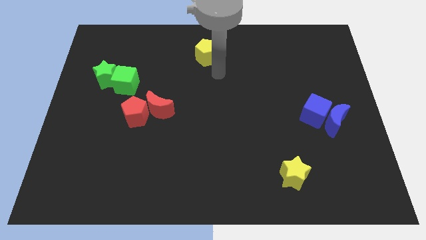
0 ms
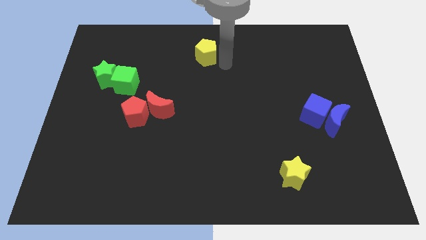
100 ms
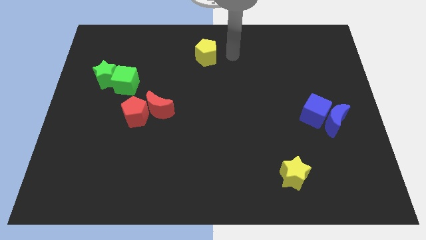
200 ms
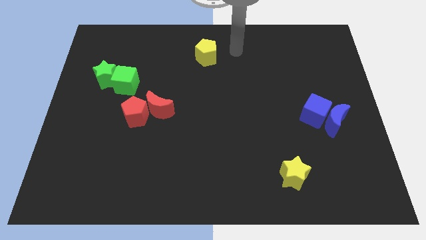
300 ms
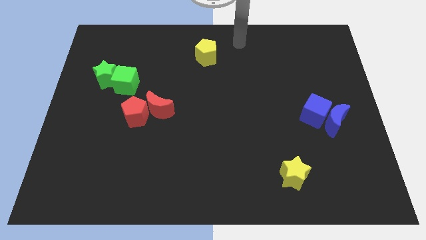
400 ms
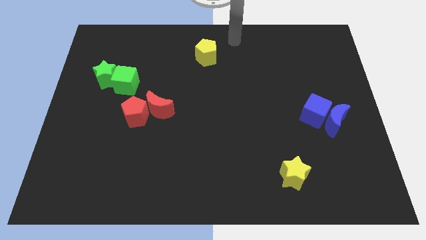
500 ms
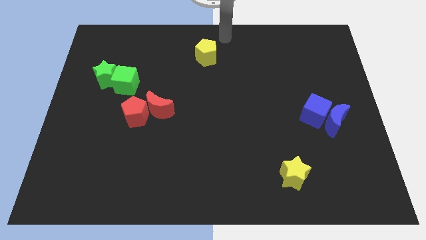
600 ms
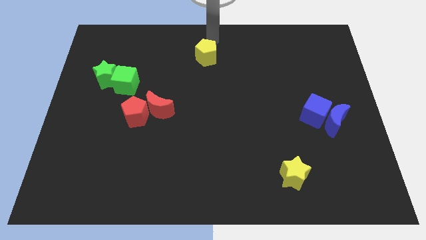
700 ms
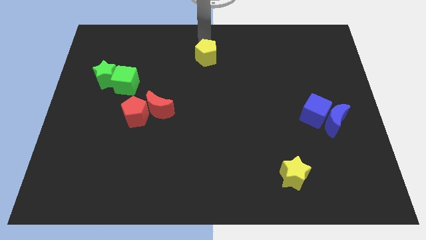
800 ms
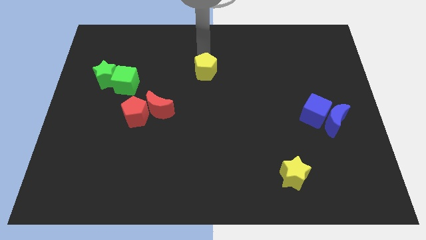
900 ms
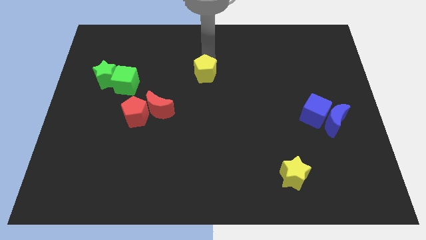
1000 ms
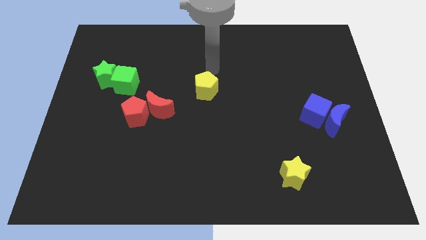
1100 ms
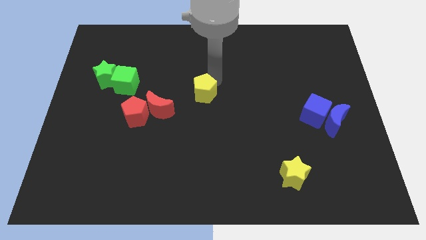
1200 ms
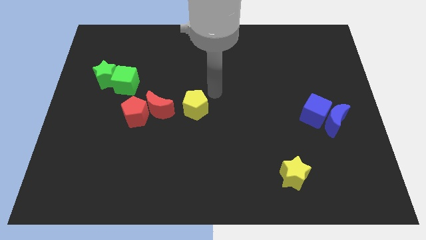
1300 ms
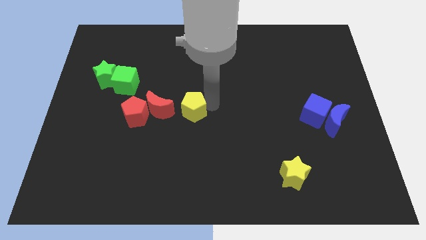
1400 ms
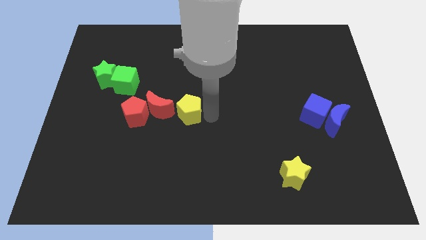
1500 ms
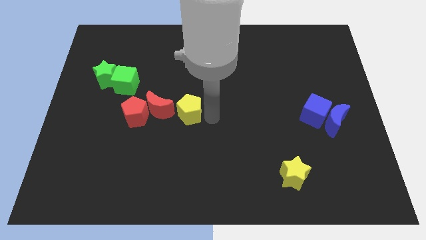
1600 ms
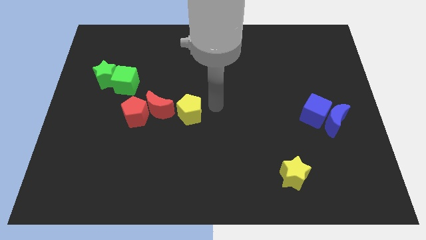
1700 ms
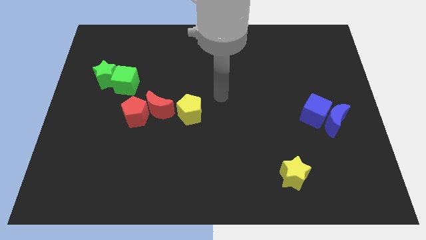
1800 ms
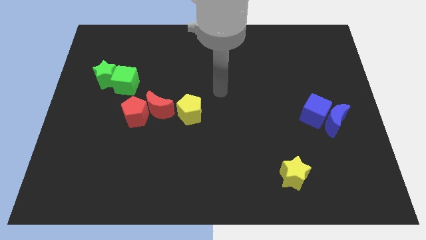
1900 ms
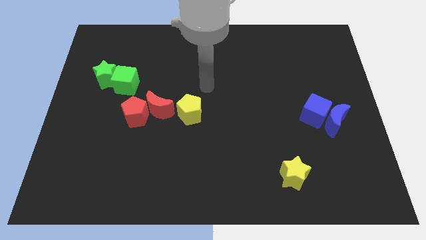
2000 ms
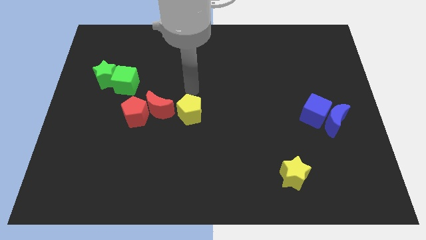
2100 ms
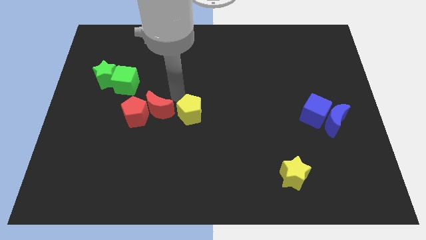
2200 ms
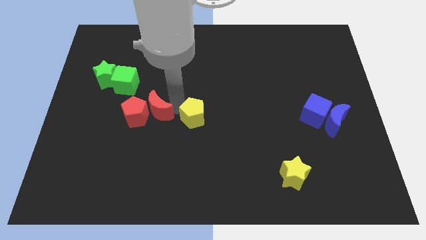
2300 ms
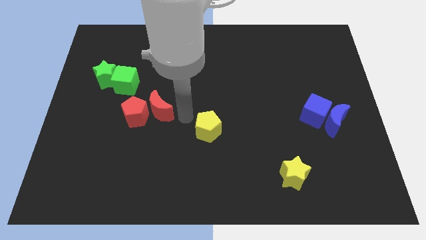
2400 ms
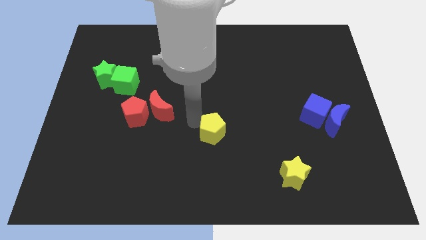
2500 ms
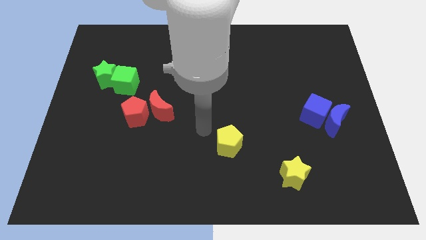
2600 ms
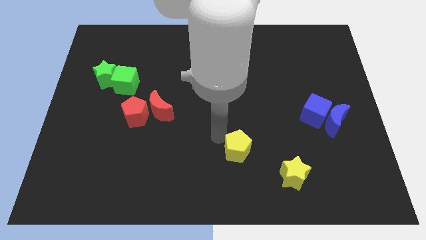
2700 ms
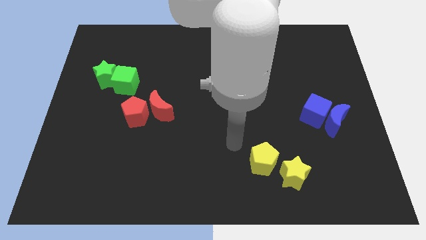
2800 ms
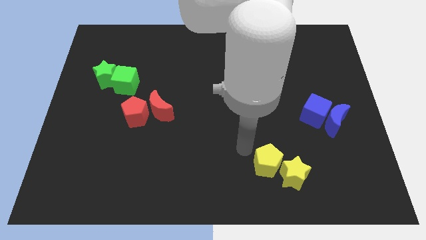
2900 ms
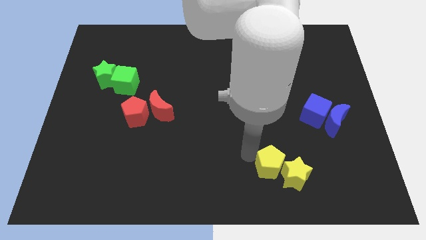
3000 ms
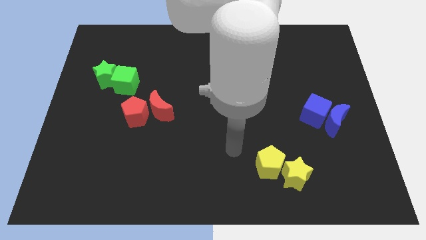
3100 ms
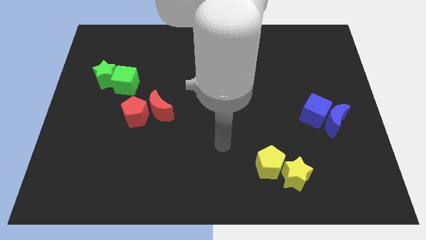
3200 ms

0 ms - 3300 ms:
place the yellow pentagon into the yellow star diagonal left

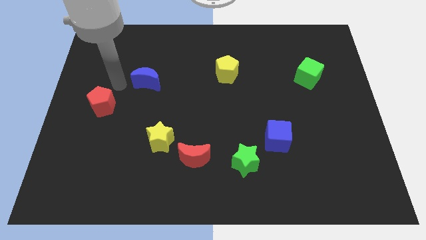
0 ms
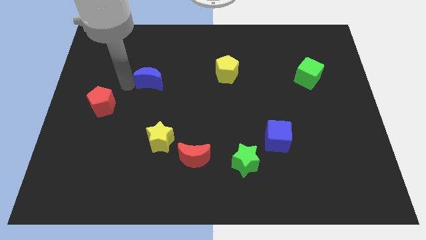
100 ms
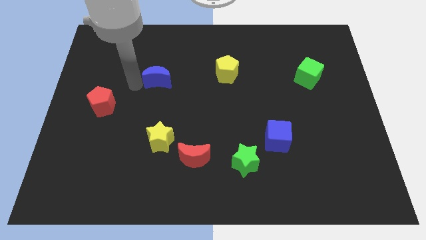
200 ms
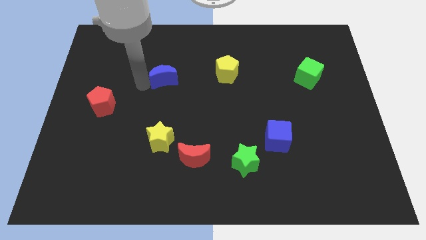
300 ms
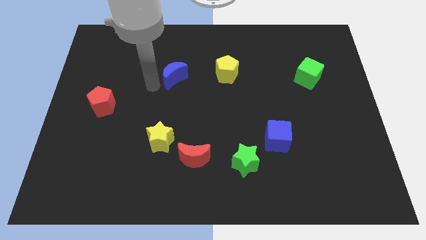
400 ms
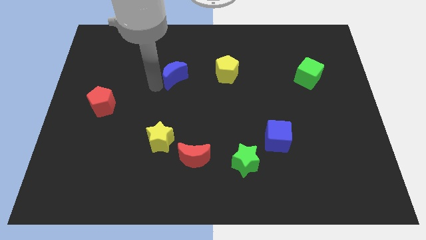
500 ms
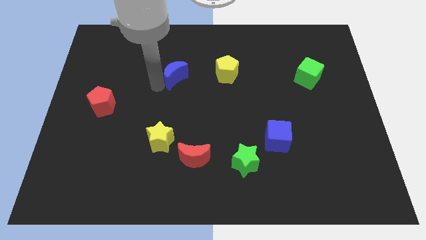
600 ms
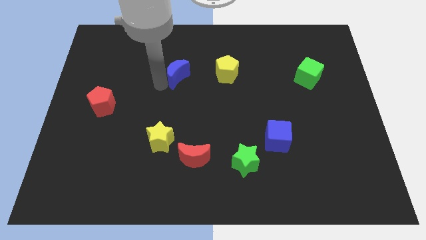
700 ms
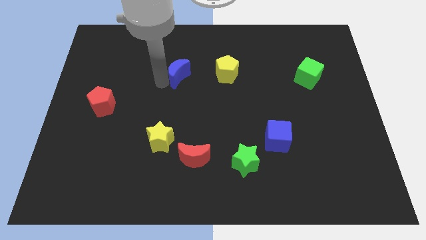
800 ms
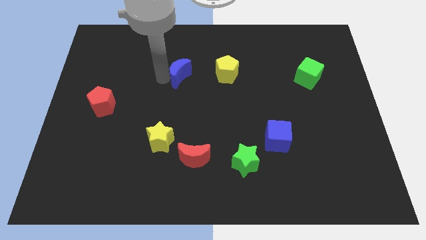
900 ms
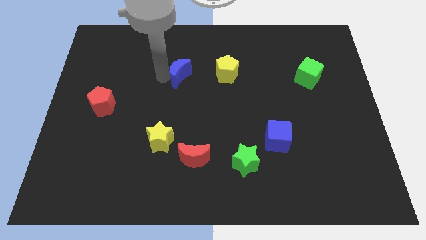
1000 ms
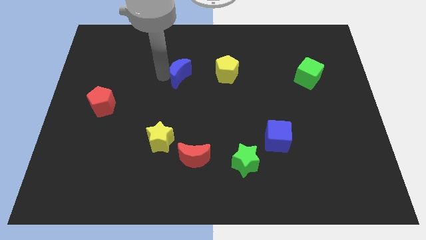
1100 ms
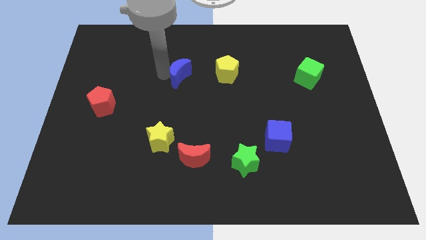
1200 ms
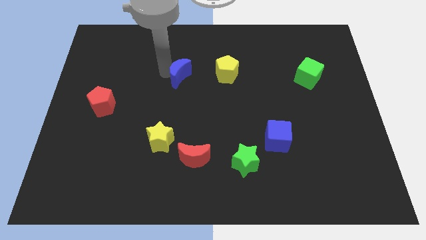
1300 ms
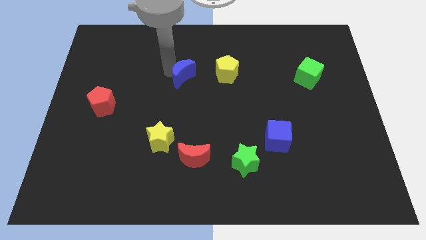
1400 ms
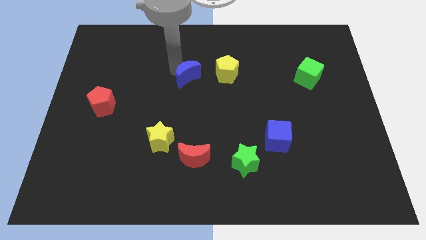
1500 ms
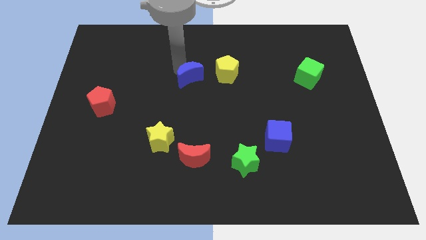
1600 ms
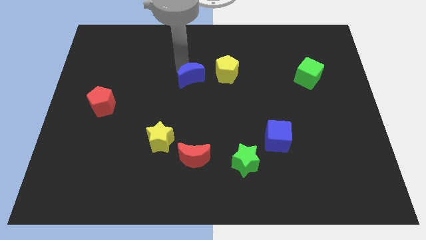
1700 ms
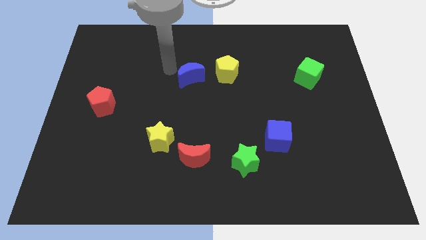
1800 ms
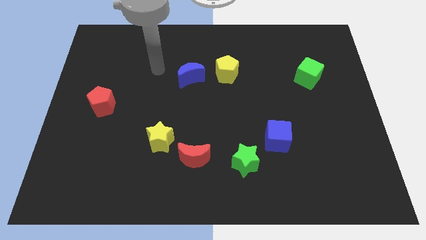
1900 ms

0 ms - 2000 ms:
push the blue crescent to the left of the yellow pentagon

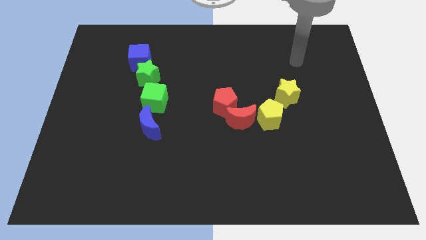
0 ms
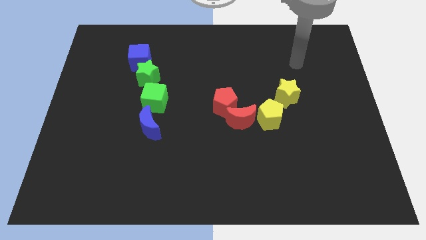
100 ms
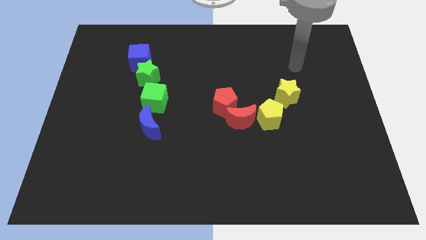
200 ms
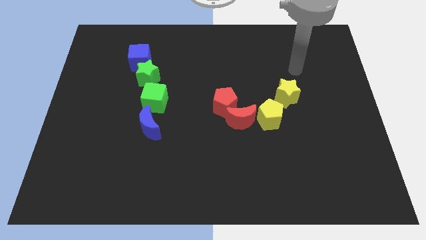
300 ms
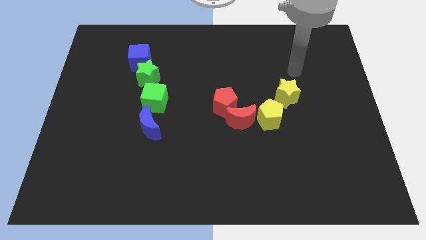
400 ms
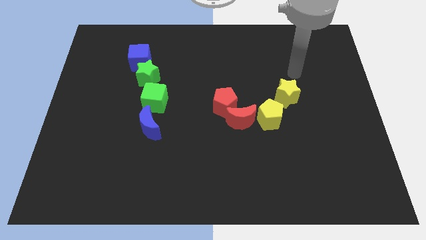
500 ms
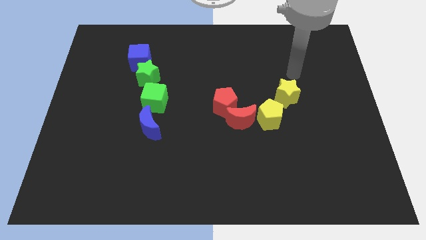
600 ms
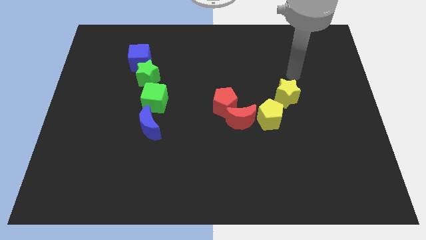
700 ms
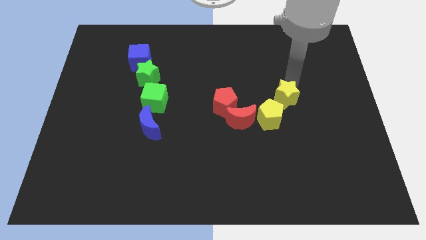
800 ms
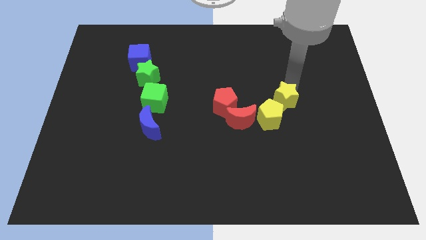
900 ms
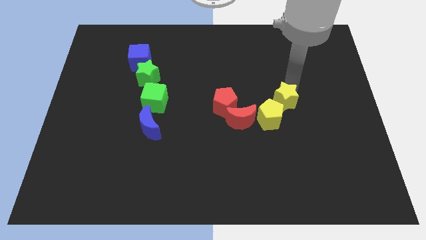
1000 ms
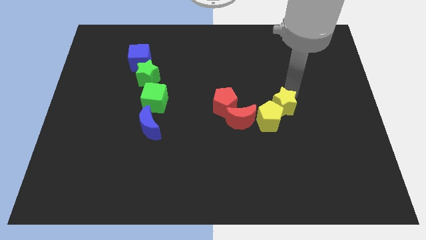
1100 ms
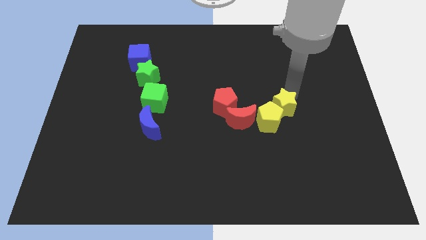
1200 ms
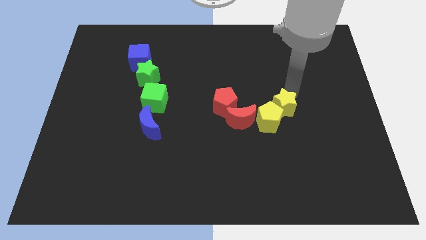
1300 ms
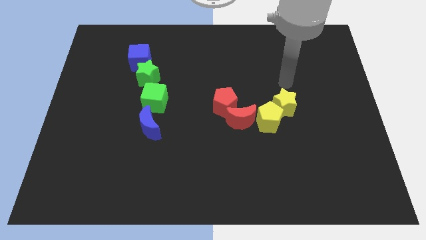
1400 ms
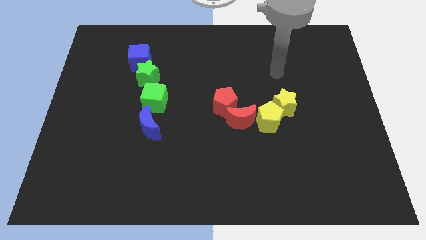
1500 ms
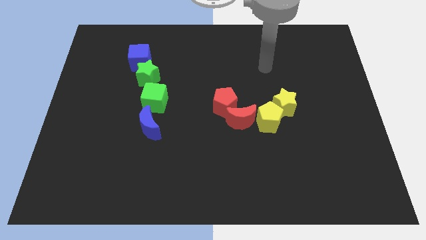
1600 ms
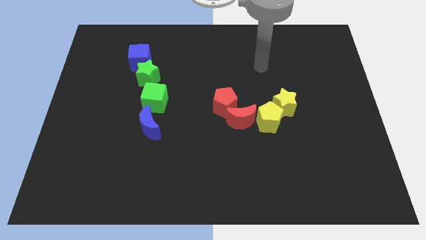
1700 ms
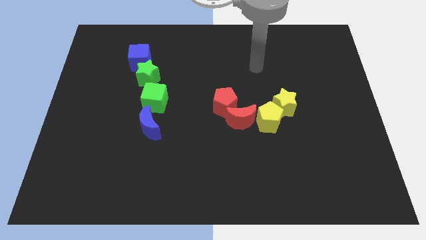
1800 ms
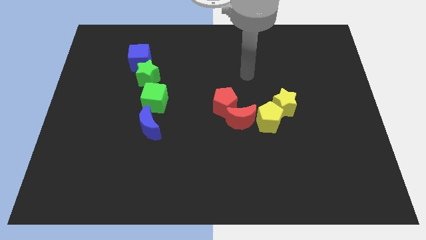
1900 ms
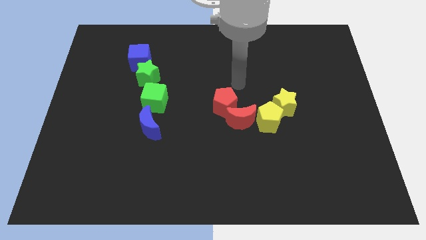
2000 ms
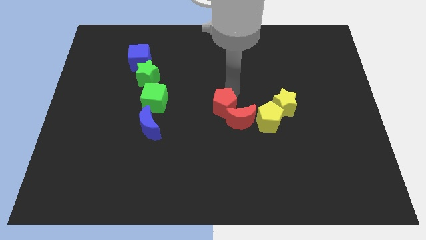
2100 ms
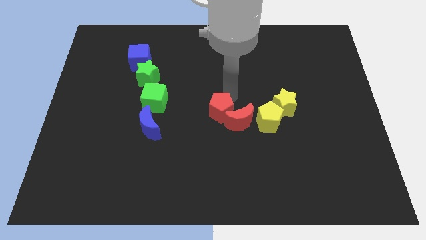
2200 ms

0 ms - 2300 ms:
push yellow star close to the yellow pentagon

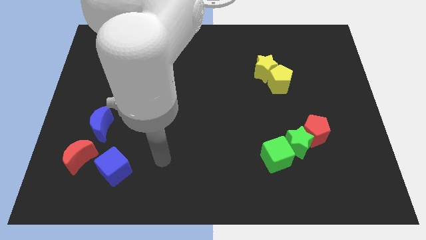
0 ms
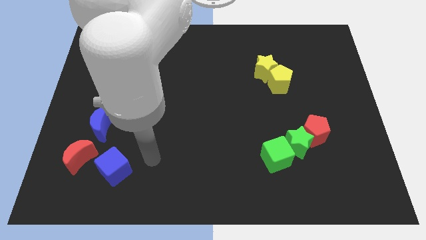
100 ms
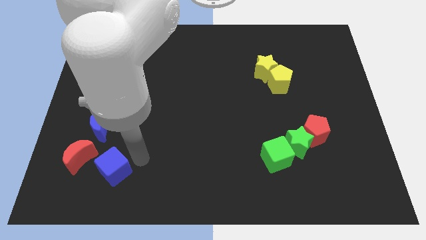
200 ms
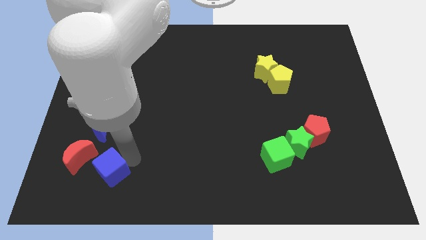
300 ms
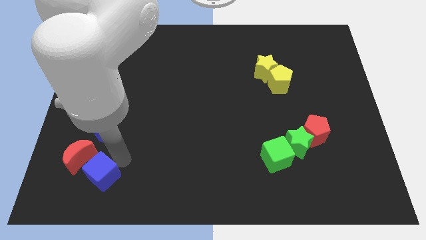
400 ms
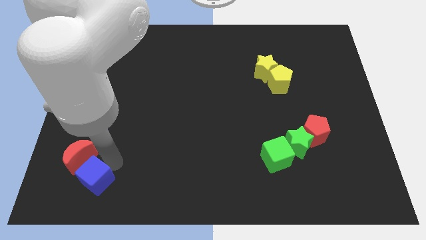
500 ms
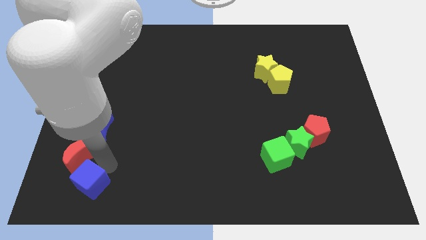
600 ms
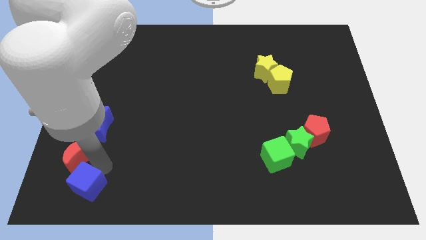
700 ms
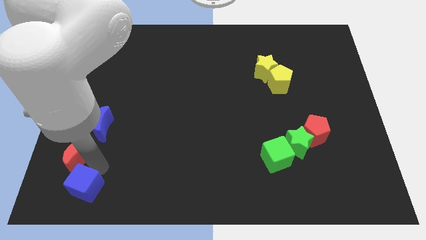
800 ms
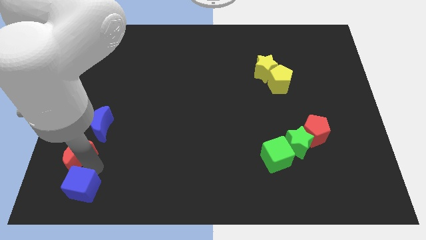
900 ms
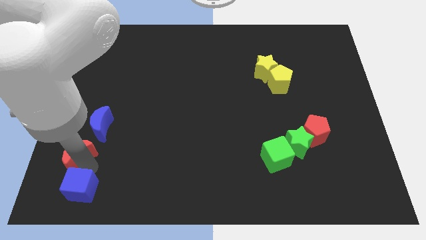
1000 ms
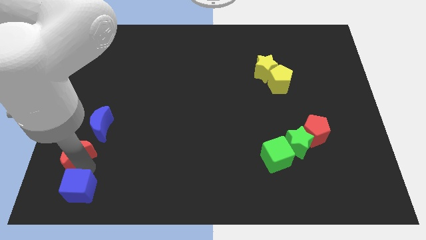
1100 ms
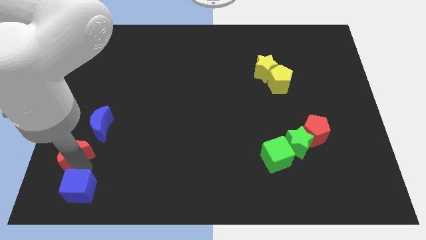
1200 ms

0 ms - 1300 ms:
place the blue cube at the bottom of red moon

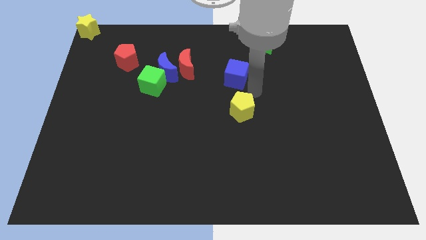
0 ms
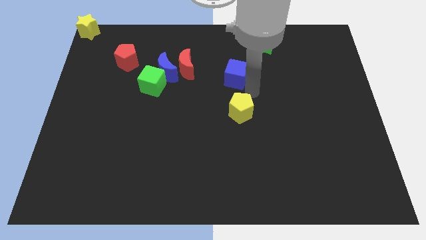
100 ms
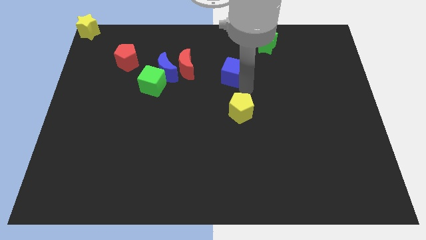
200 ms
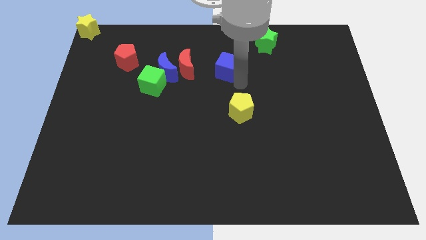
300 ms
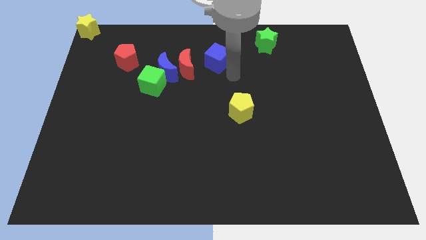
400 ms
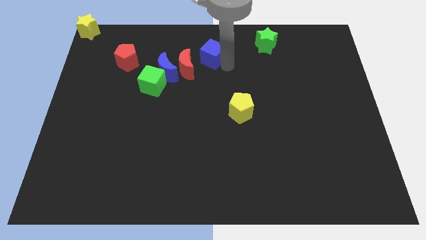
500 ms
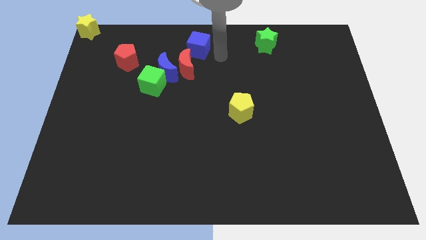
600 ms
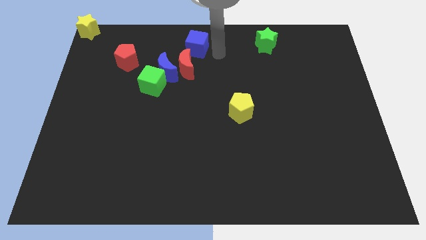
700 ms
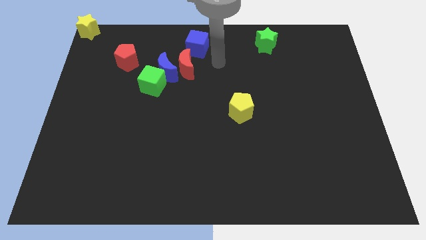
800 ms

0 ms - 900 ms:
move the blue cube to the left of the green star
